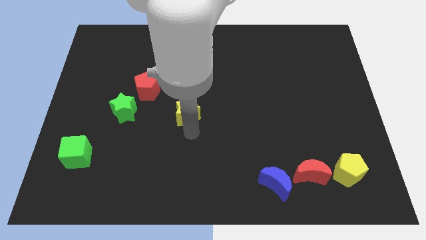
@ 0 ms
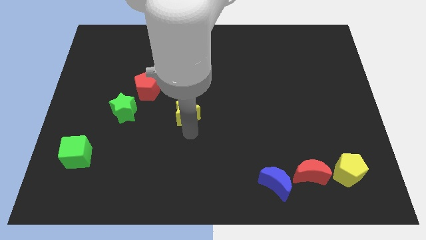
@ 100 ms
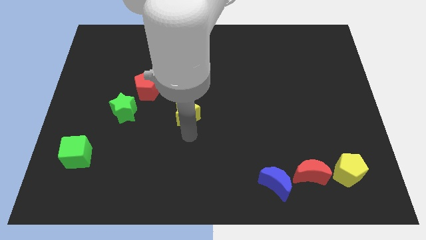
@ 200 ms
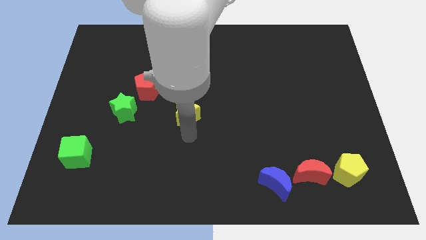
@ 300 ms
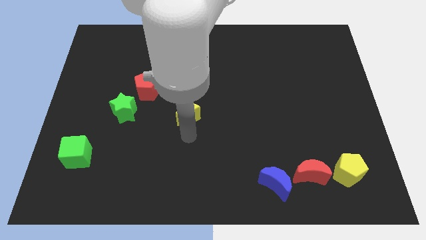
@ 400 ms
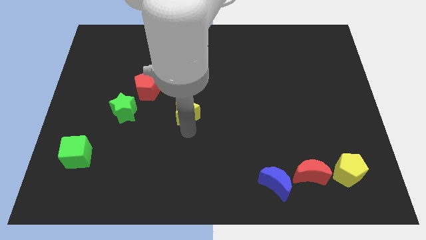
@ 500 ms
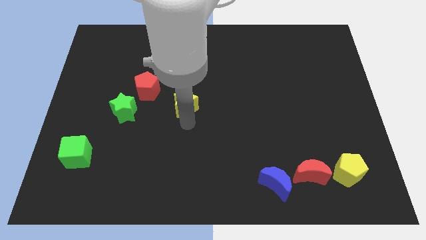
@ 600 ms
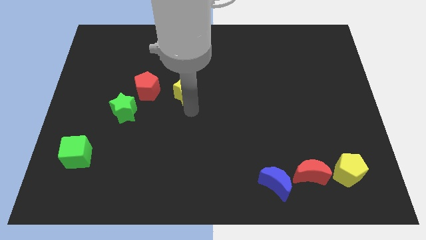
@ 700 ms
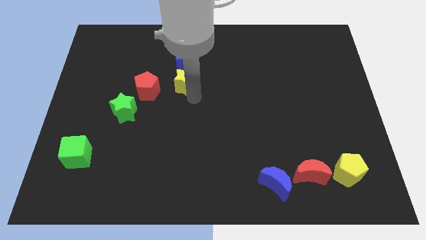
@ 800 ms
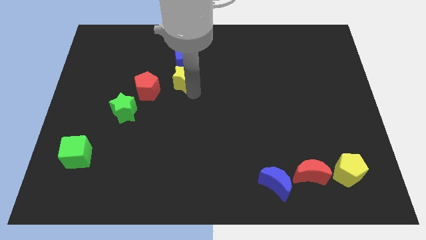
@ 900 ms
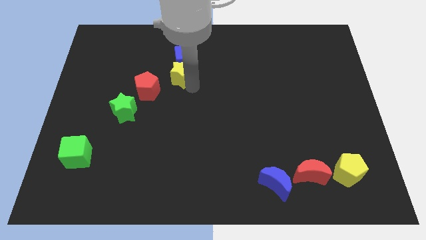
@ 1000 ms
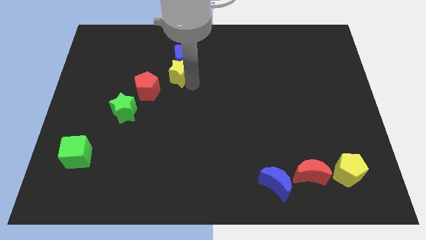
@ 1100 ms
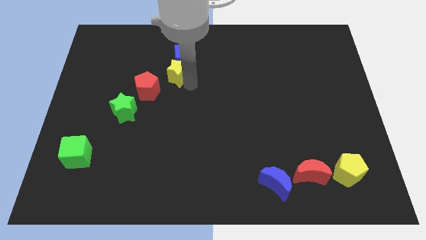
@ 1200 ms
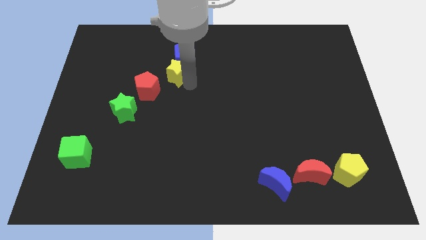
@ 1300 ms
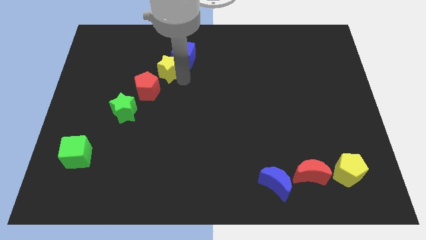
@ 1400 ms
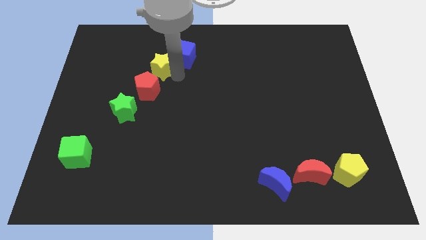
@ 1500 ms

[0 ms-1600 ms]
place yellow star between red pentagon and blue cube

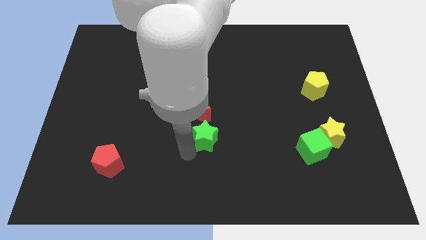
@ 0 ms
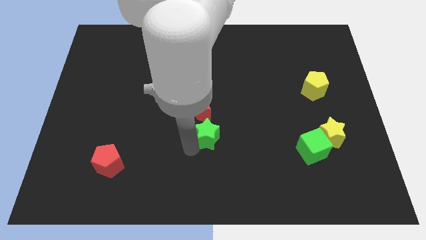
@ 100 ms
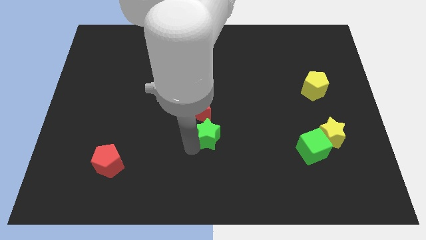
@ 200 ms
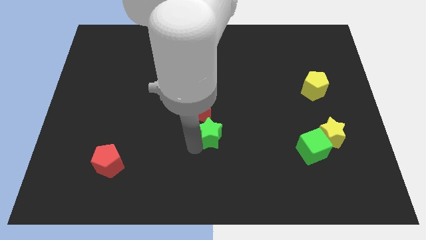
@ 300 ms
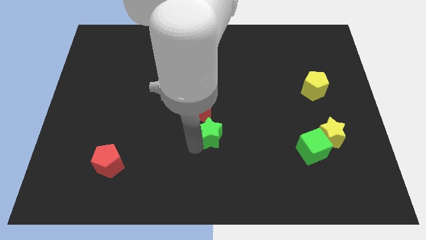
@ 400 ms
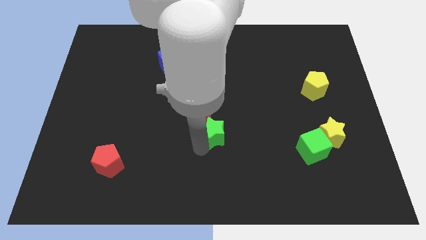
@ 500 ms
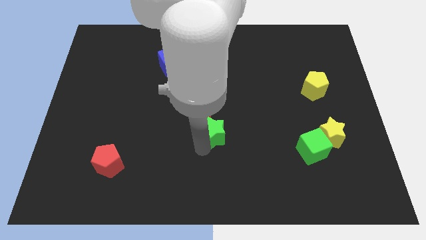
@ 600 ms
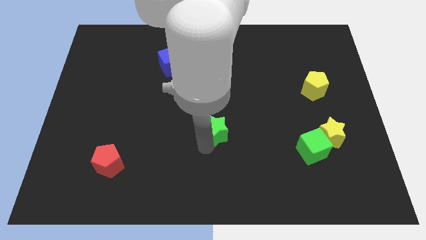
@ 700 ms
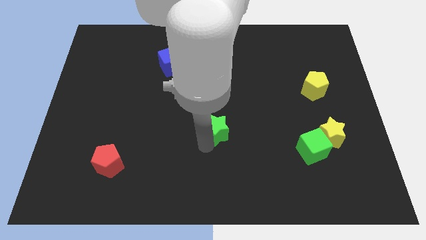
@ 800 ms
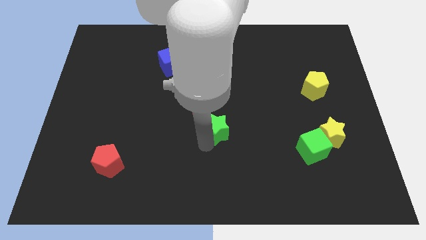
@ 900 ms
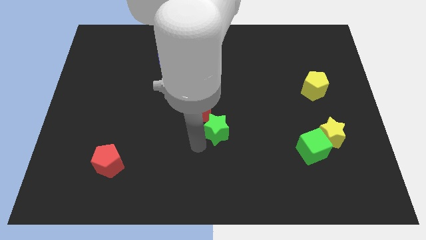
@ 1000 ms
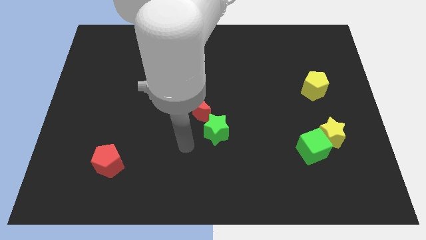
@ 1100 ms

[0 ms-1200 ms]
move the green star to the bottom right to red moon

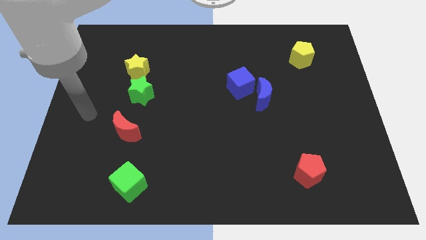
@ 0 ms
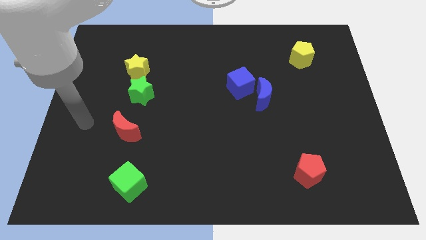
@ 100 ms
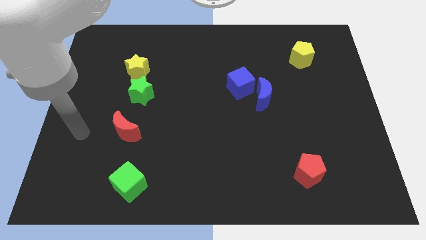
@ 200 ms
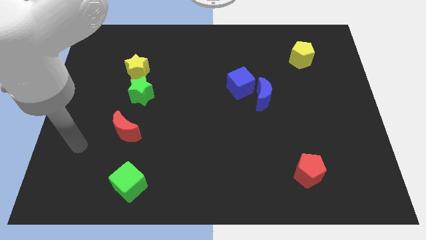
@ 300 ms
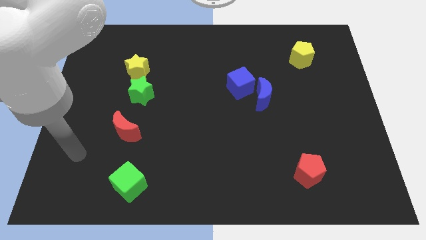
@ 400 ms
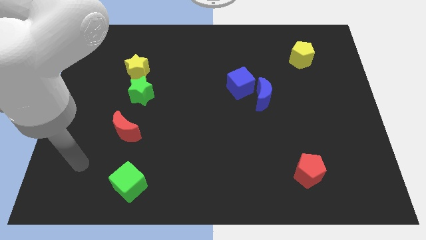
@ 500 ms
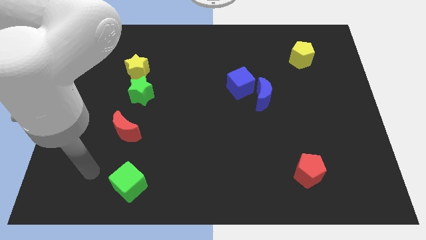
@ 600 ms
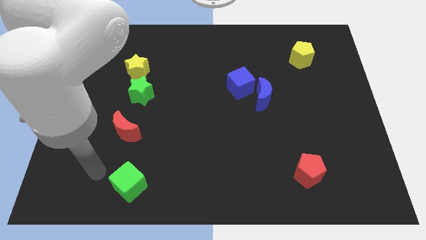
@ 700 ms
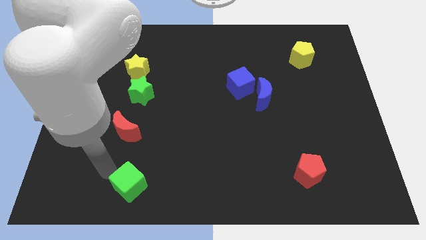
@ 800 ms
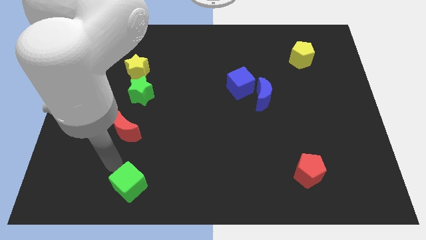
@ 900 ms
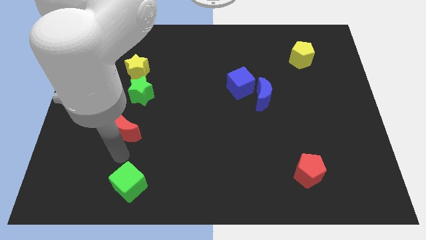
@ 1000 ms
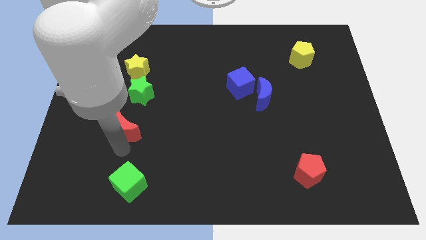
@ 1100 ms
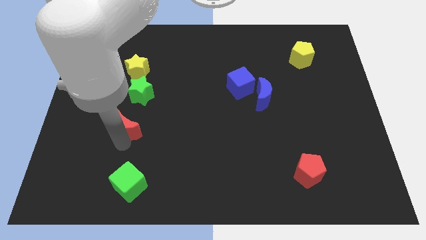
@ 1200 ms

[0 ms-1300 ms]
touch the bottom of red moon

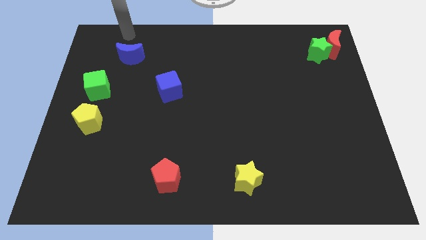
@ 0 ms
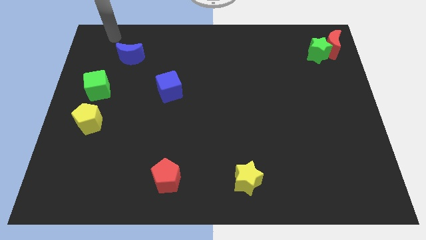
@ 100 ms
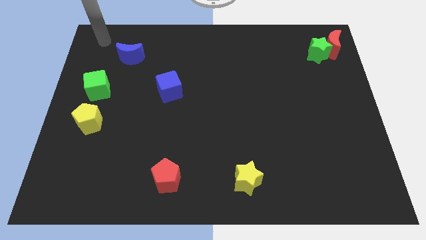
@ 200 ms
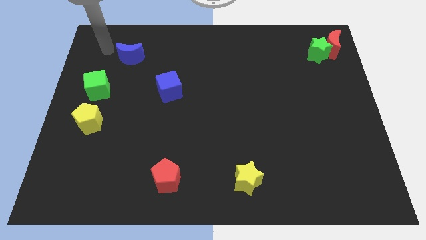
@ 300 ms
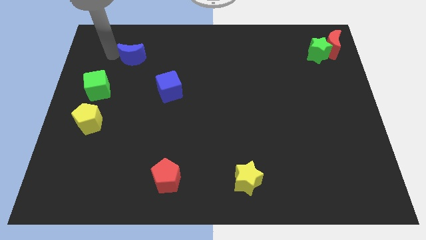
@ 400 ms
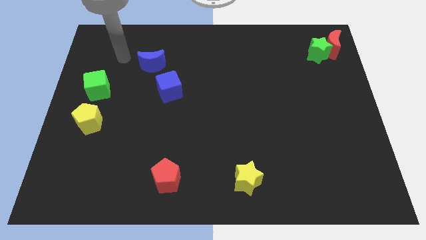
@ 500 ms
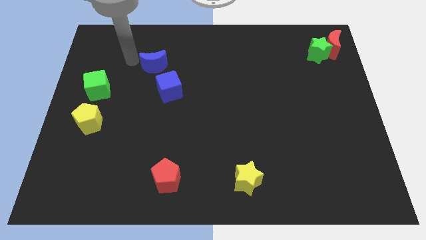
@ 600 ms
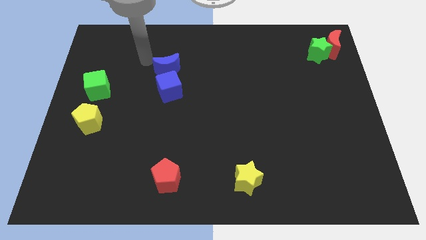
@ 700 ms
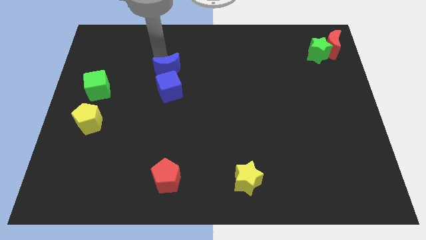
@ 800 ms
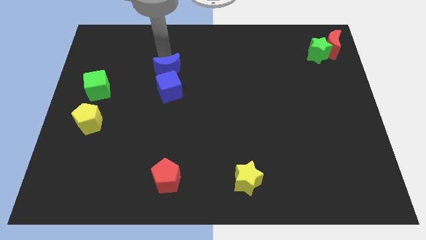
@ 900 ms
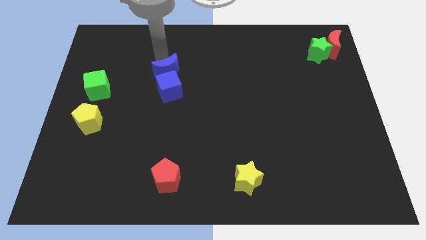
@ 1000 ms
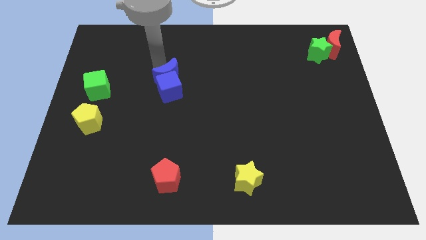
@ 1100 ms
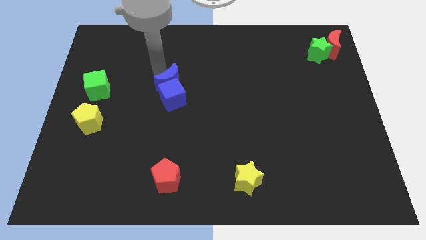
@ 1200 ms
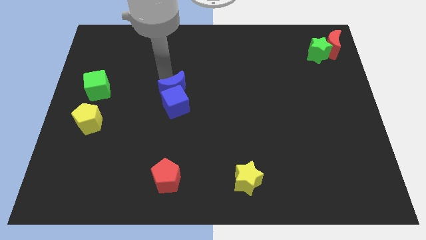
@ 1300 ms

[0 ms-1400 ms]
push the blue moon to the top of the blue cube

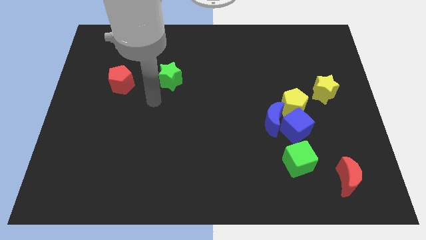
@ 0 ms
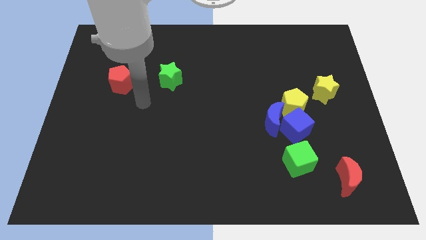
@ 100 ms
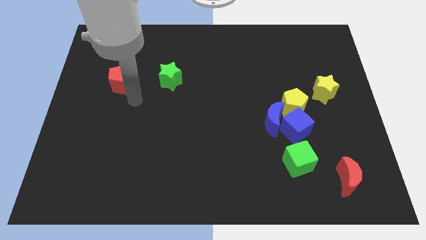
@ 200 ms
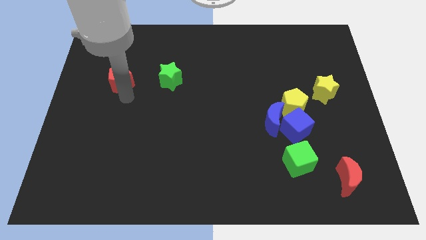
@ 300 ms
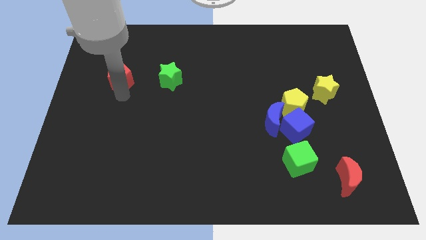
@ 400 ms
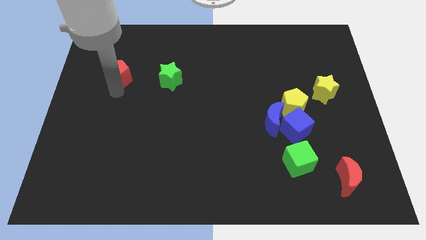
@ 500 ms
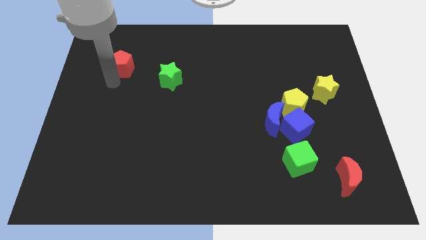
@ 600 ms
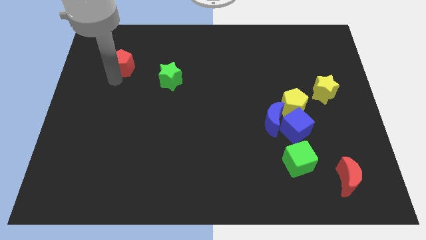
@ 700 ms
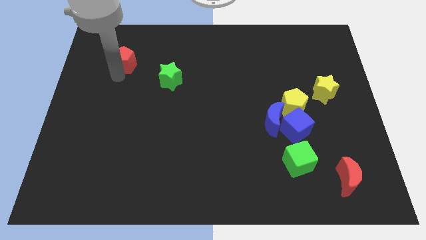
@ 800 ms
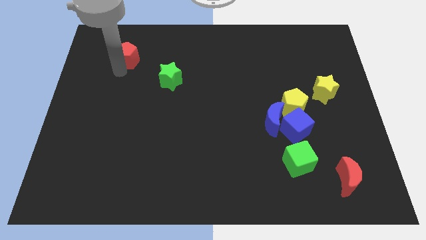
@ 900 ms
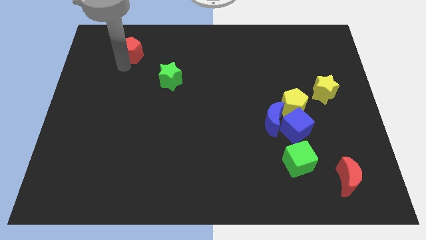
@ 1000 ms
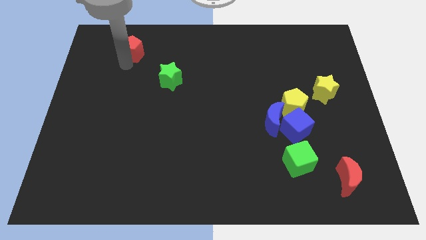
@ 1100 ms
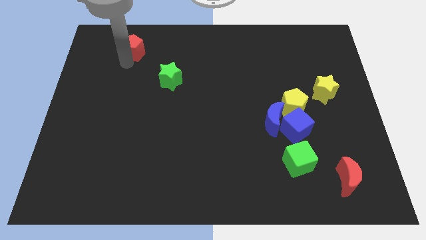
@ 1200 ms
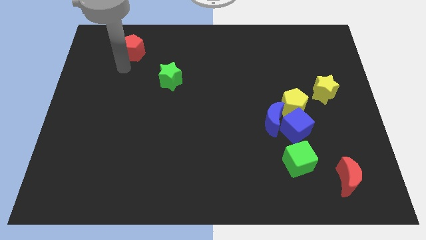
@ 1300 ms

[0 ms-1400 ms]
push the red pentagon to the top left of the green star

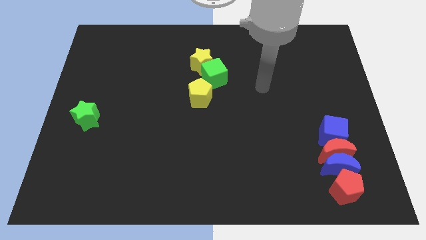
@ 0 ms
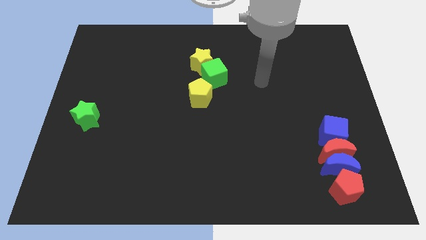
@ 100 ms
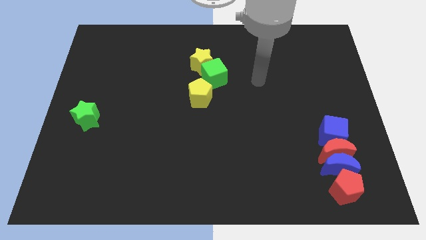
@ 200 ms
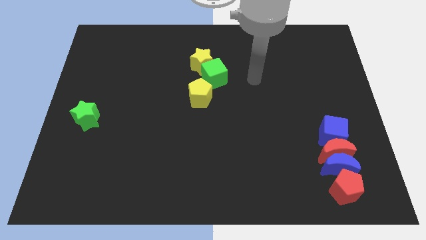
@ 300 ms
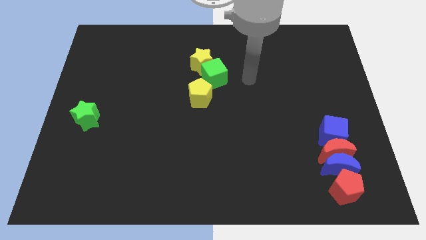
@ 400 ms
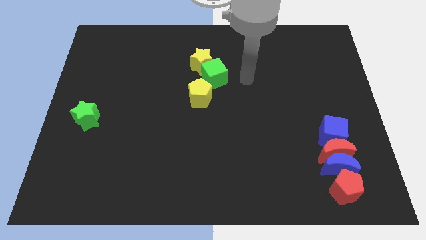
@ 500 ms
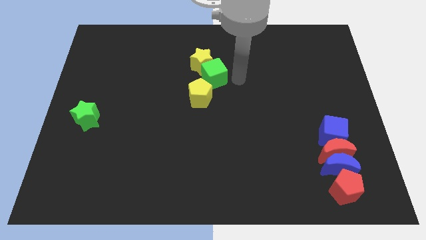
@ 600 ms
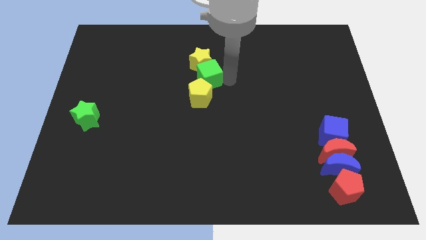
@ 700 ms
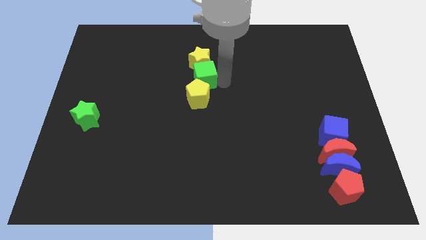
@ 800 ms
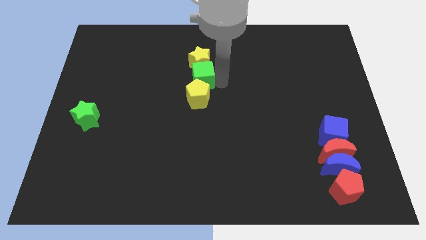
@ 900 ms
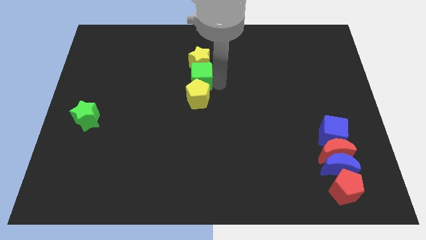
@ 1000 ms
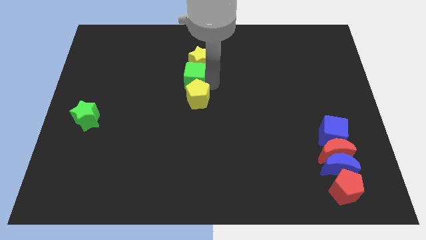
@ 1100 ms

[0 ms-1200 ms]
place green cube in between the yellow pentagon and yellow star

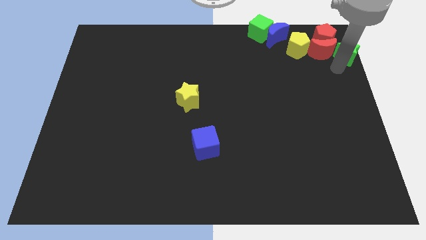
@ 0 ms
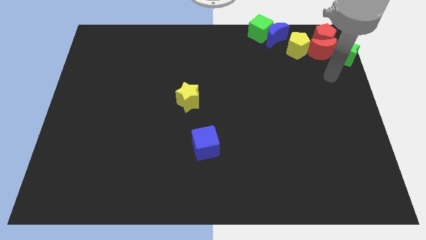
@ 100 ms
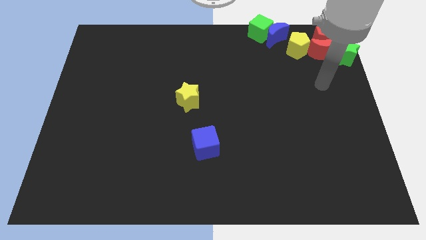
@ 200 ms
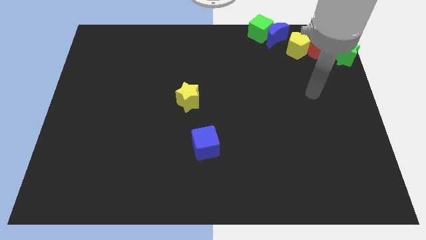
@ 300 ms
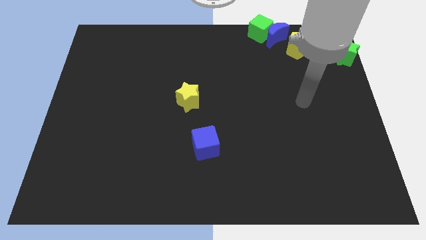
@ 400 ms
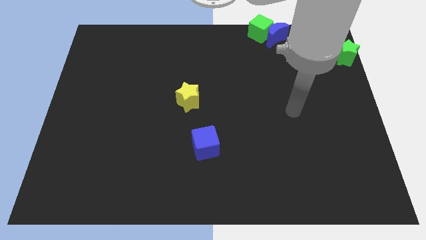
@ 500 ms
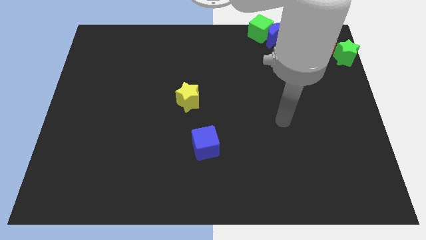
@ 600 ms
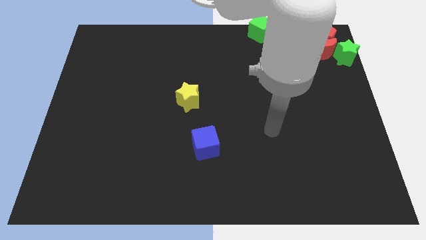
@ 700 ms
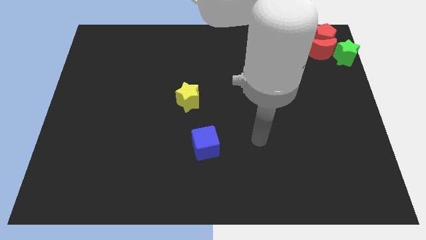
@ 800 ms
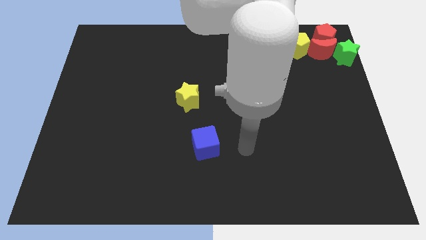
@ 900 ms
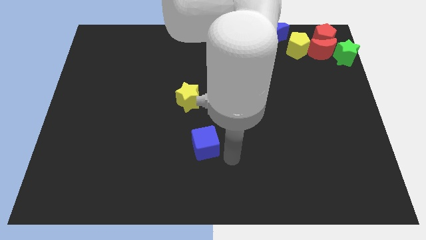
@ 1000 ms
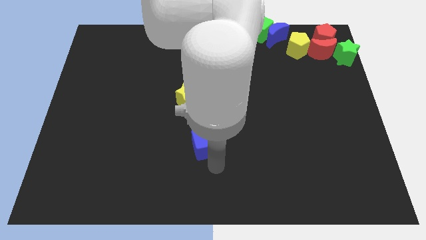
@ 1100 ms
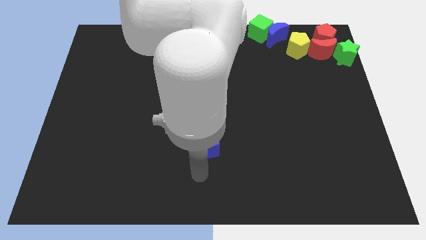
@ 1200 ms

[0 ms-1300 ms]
move your arm away from green star
